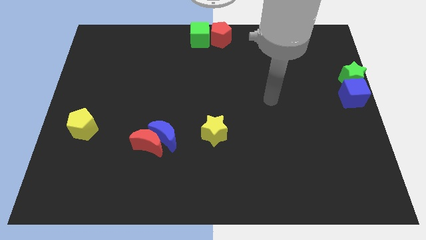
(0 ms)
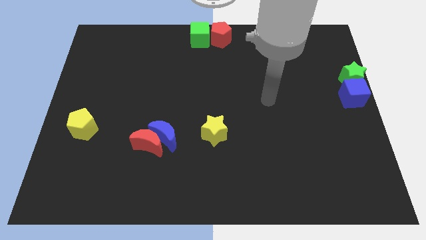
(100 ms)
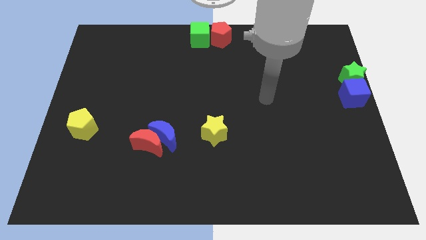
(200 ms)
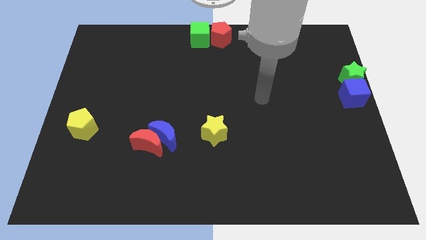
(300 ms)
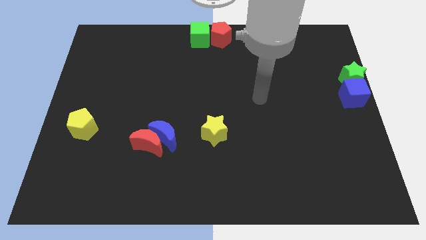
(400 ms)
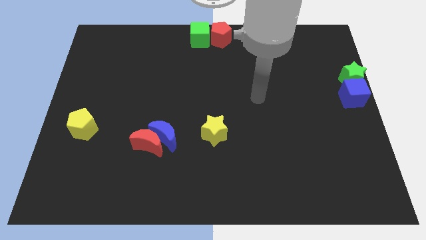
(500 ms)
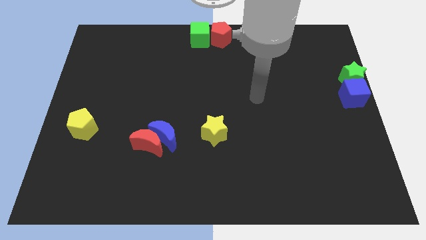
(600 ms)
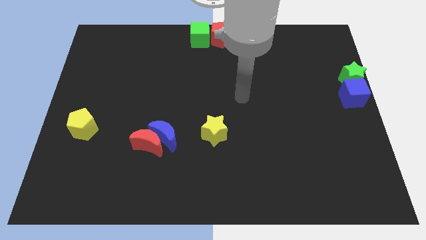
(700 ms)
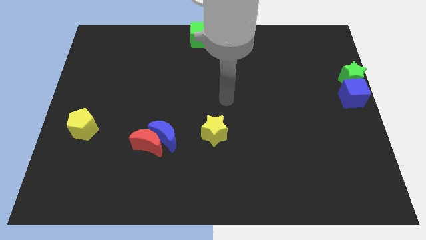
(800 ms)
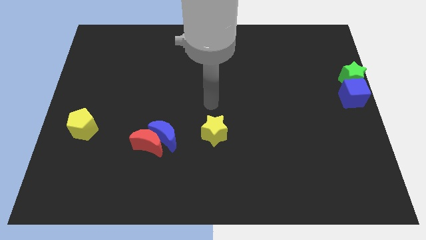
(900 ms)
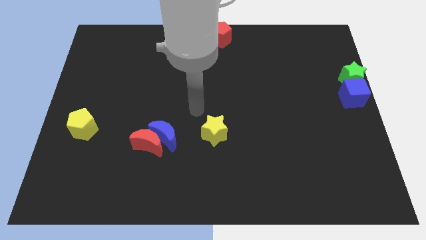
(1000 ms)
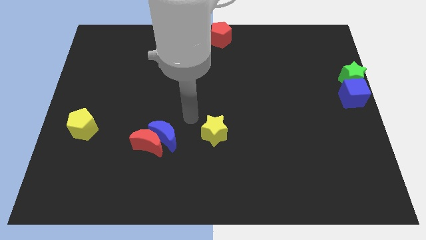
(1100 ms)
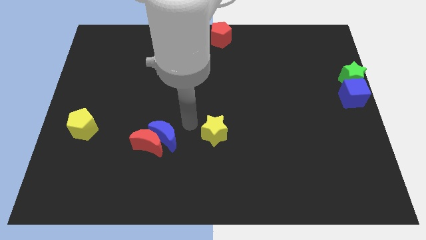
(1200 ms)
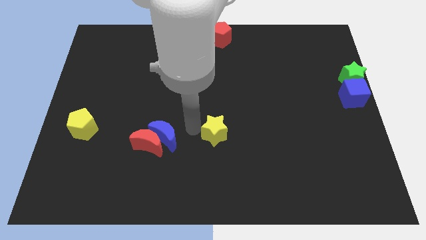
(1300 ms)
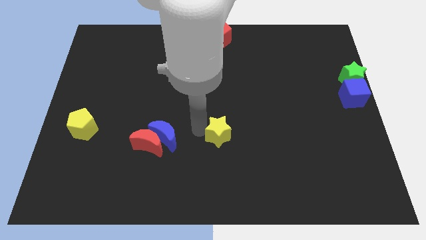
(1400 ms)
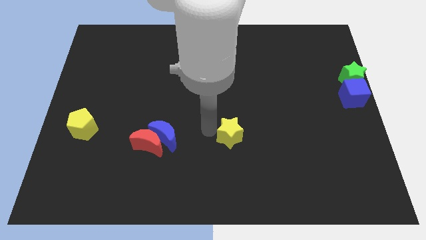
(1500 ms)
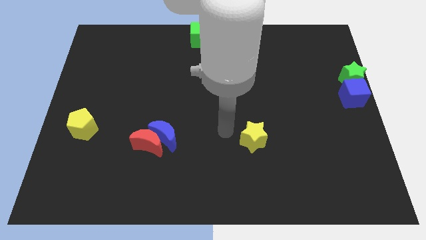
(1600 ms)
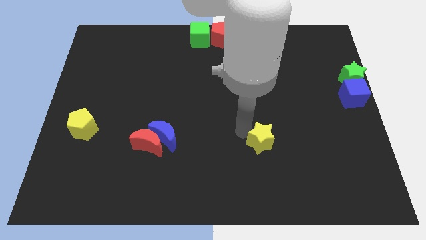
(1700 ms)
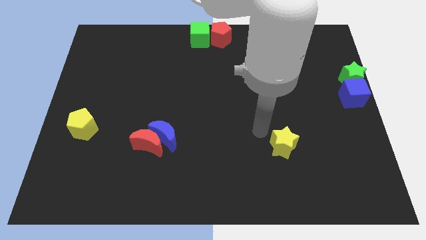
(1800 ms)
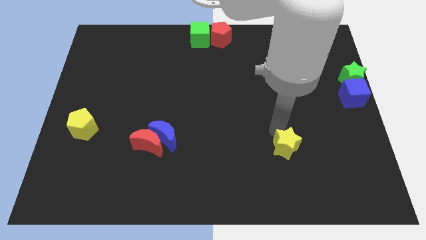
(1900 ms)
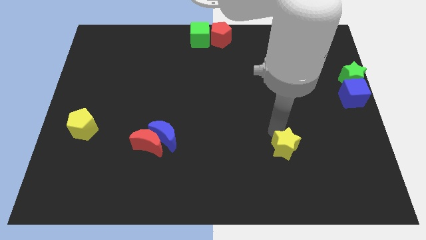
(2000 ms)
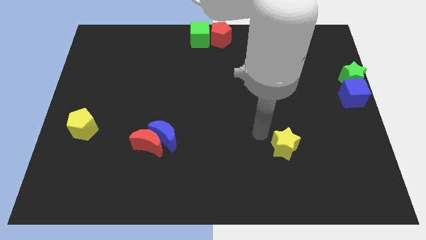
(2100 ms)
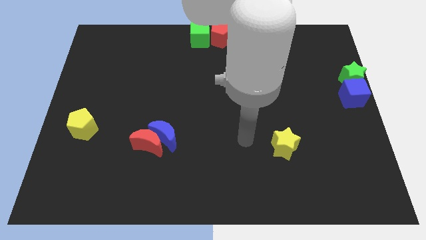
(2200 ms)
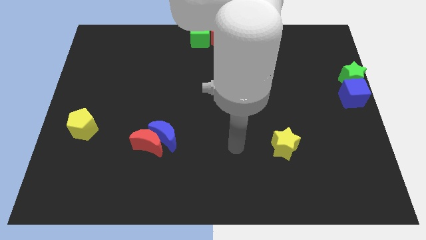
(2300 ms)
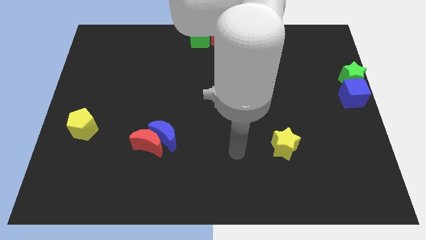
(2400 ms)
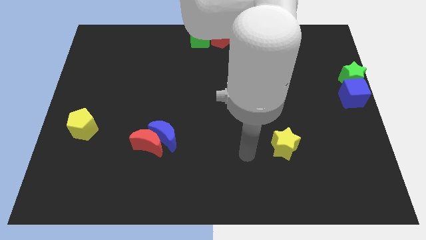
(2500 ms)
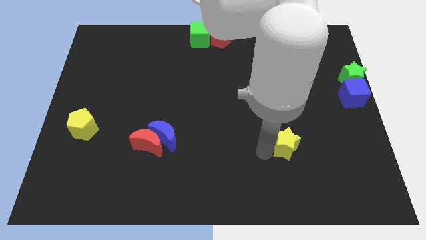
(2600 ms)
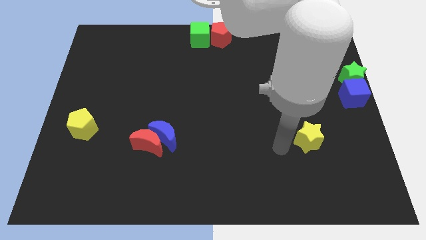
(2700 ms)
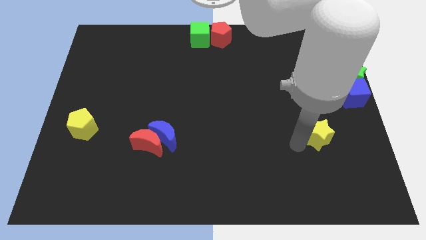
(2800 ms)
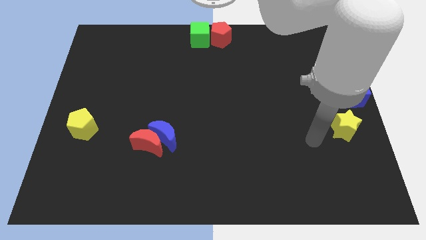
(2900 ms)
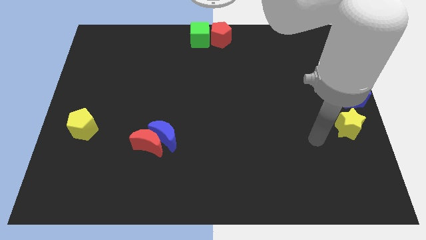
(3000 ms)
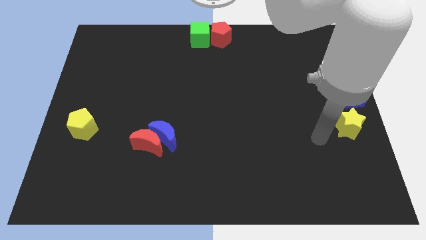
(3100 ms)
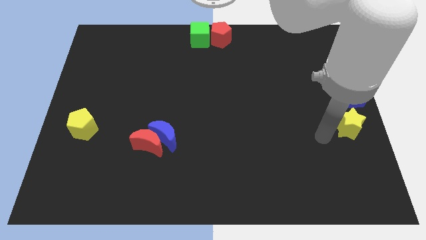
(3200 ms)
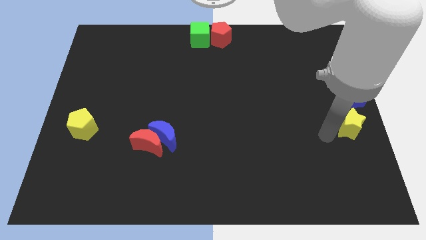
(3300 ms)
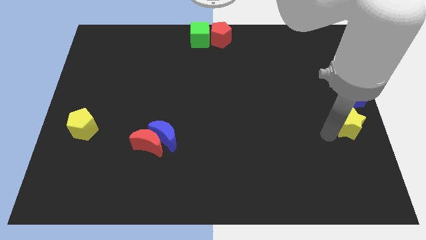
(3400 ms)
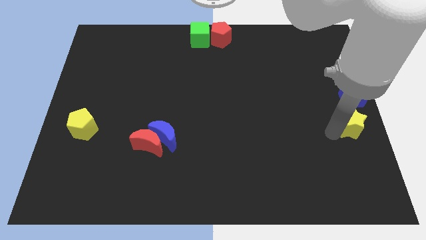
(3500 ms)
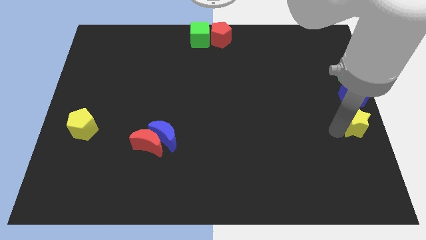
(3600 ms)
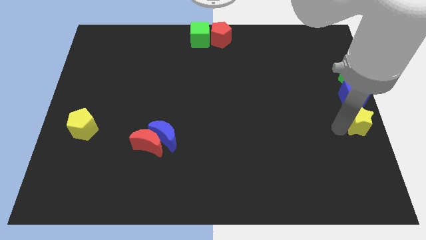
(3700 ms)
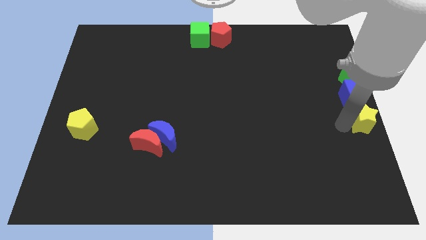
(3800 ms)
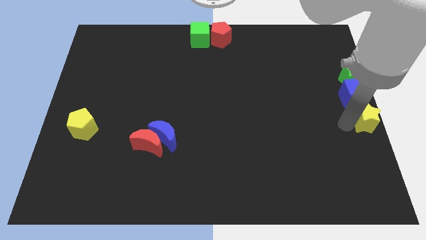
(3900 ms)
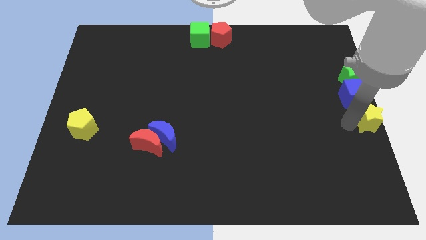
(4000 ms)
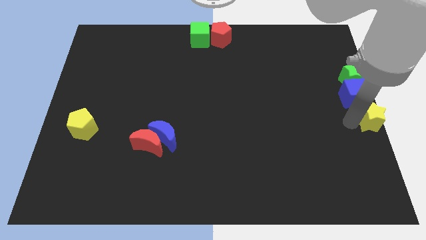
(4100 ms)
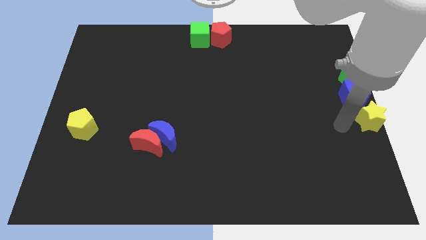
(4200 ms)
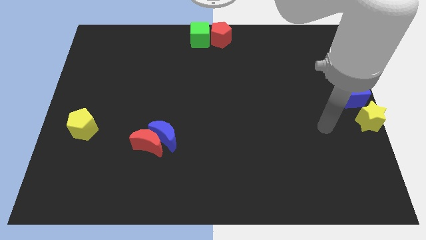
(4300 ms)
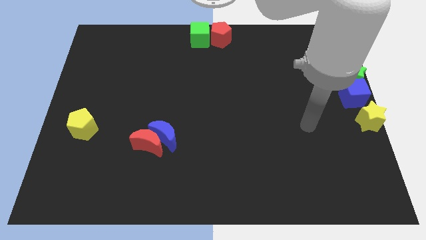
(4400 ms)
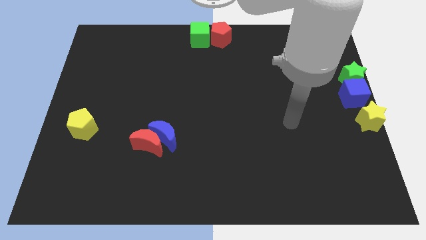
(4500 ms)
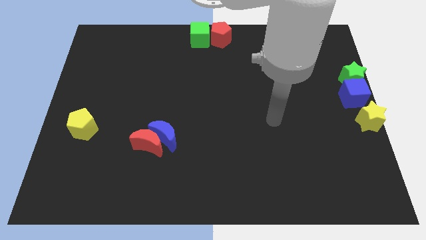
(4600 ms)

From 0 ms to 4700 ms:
slide the yellow star towards the right center of the board

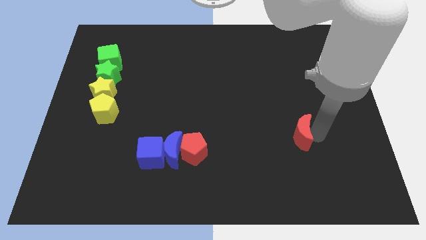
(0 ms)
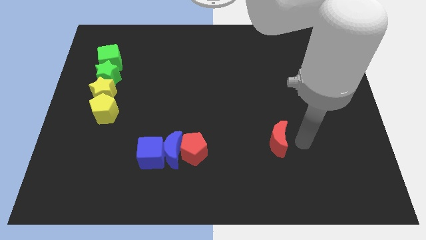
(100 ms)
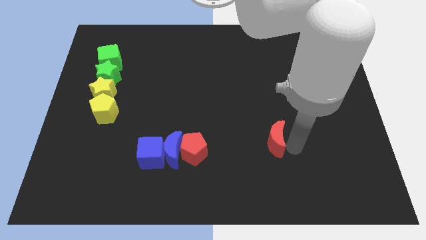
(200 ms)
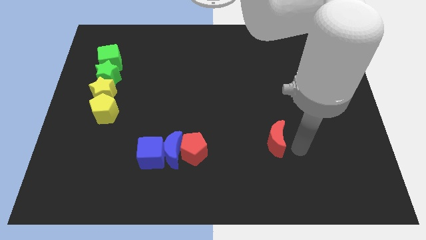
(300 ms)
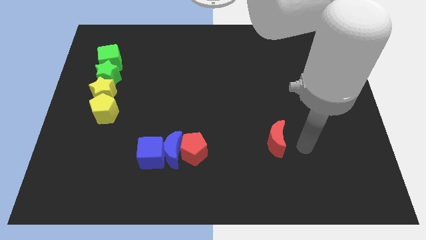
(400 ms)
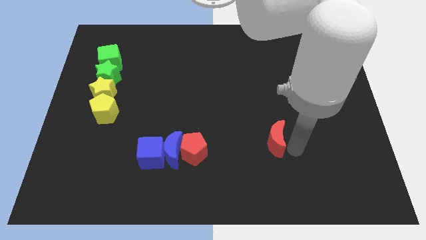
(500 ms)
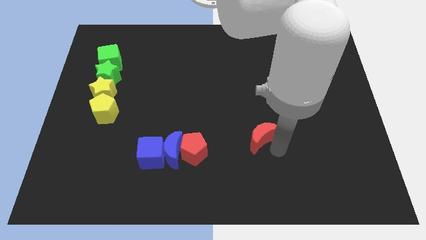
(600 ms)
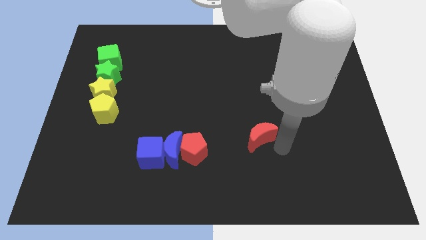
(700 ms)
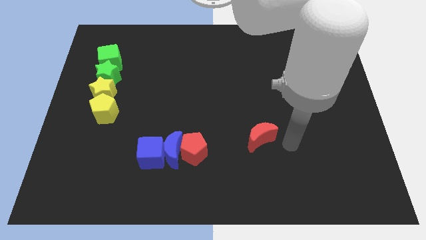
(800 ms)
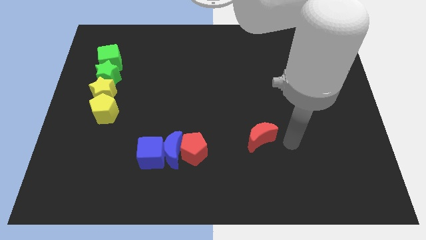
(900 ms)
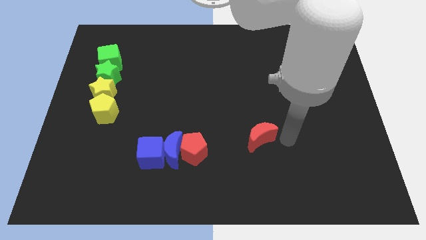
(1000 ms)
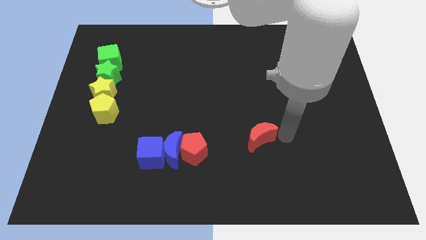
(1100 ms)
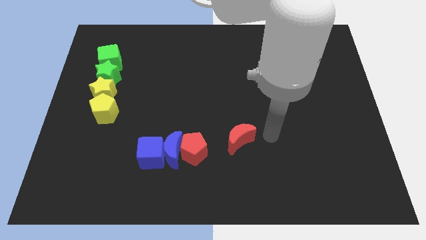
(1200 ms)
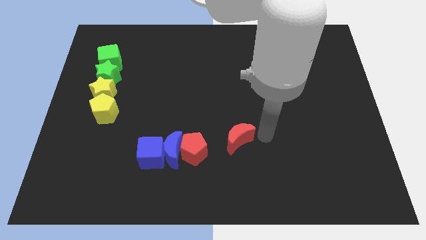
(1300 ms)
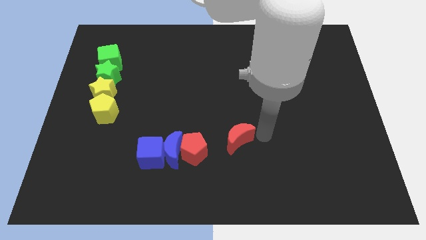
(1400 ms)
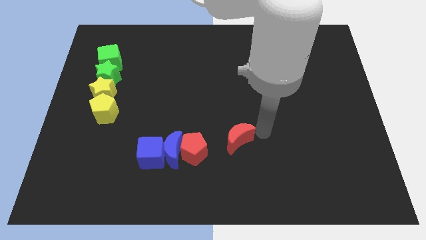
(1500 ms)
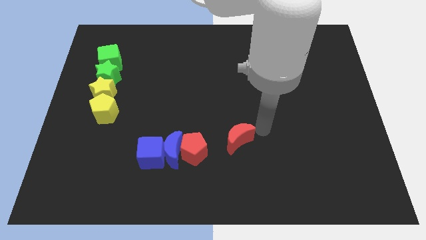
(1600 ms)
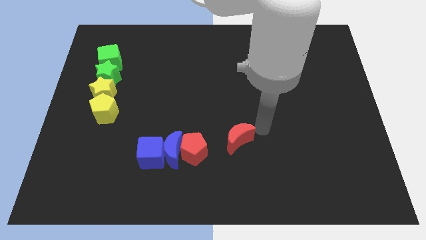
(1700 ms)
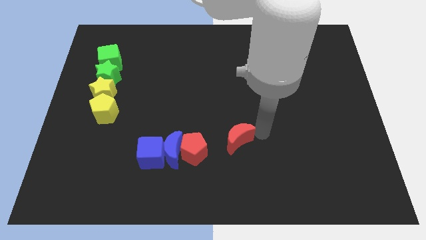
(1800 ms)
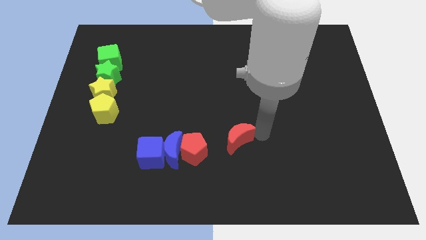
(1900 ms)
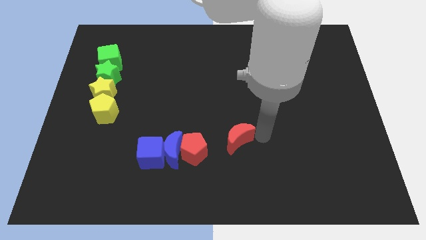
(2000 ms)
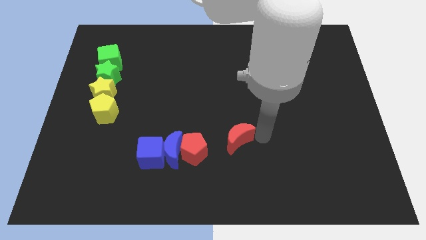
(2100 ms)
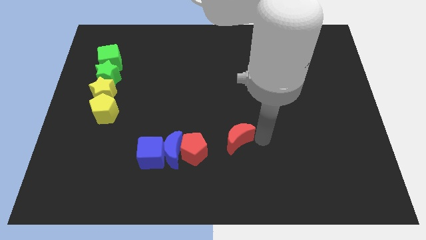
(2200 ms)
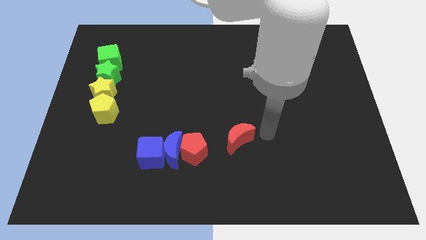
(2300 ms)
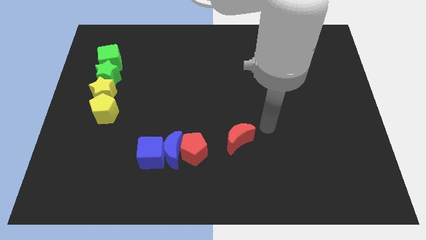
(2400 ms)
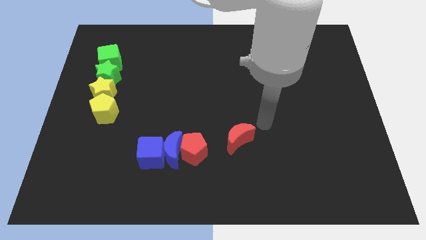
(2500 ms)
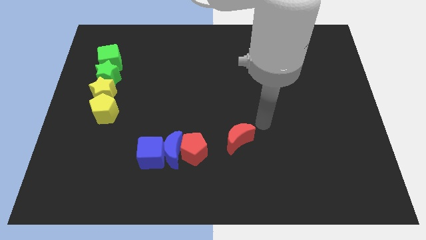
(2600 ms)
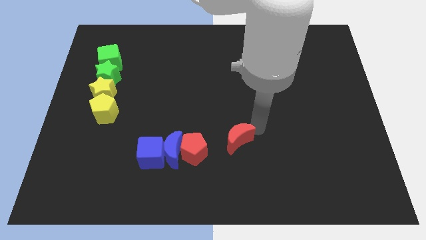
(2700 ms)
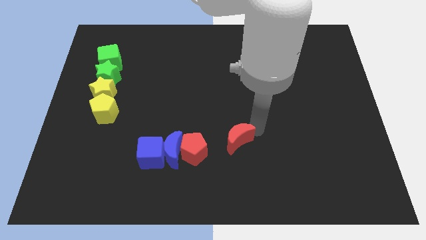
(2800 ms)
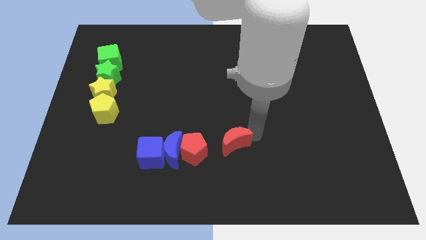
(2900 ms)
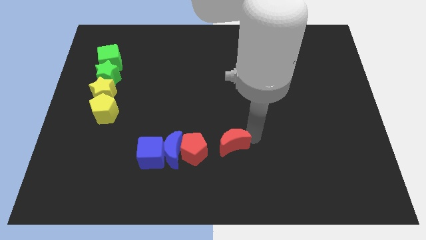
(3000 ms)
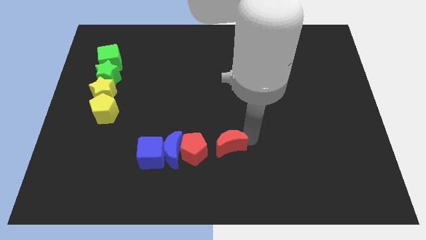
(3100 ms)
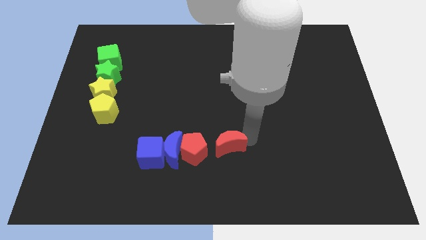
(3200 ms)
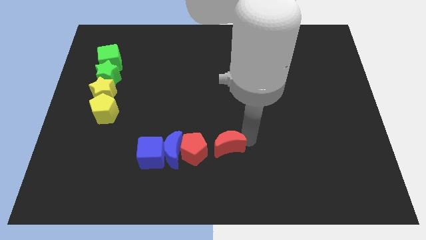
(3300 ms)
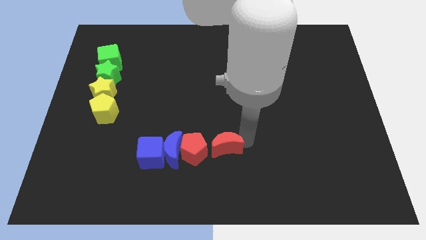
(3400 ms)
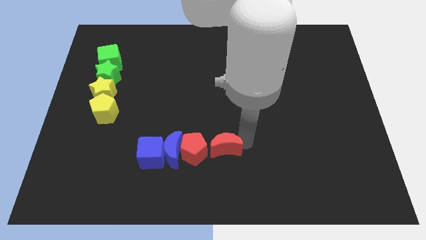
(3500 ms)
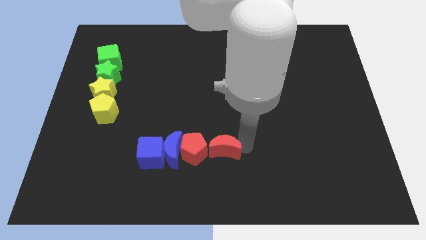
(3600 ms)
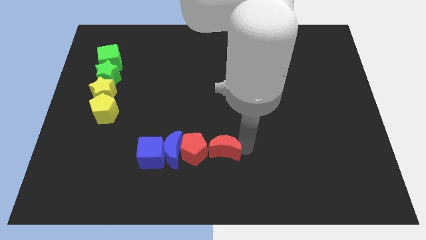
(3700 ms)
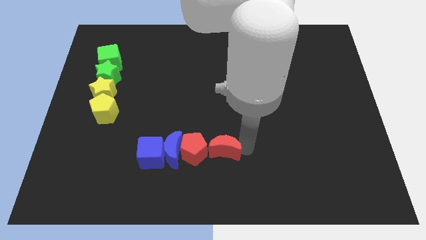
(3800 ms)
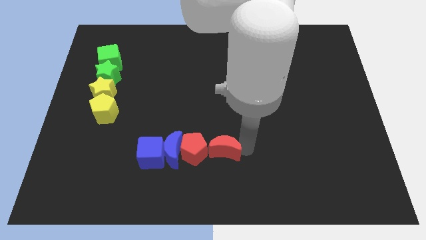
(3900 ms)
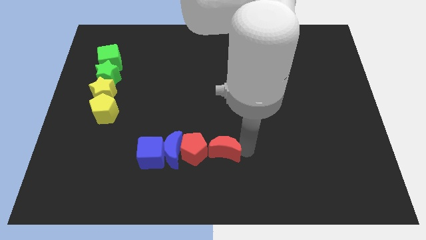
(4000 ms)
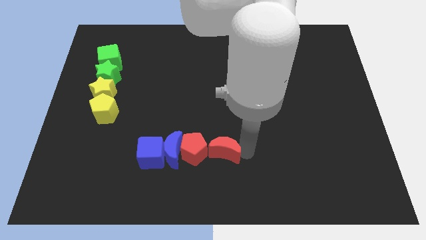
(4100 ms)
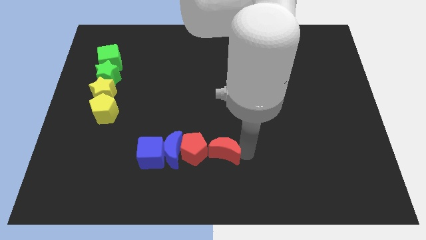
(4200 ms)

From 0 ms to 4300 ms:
place red crescent to the right of red pentagon
